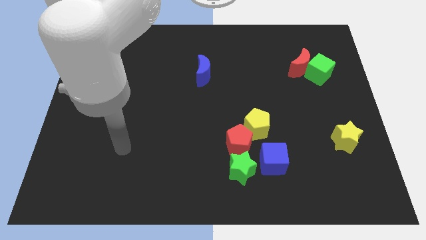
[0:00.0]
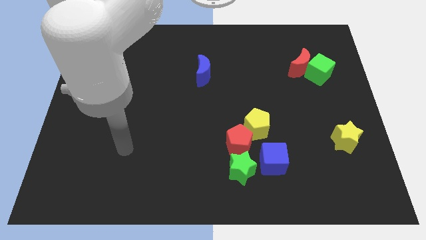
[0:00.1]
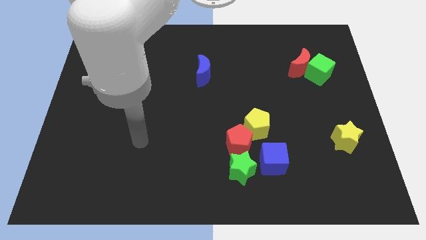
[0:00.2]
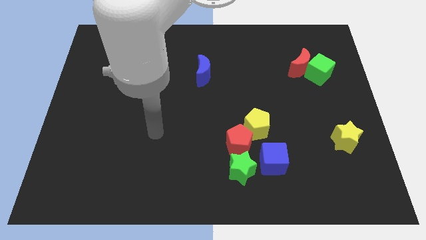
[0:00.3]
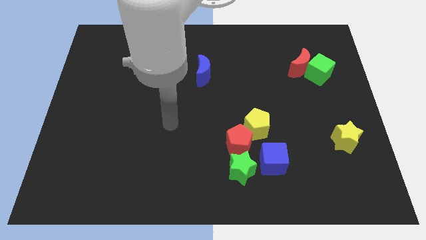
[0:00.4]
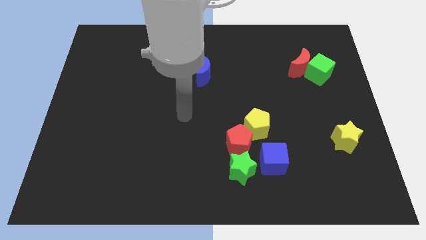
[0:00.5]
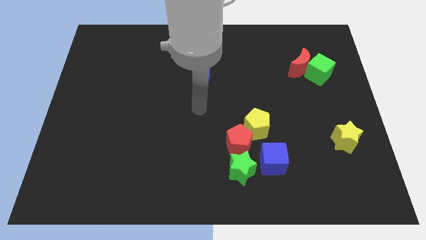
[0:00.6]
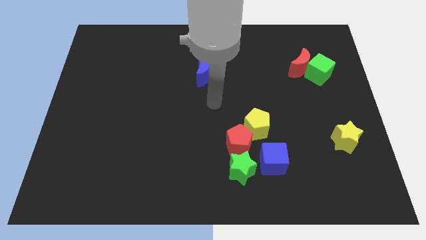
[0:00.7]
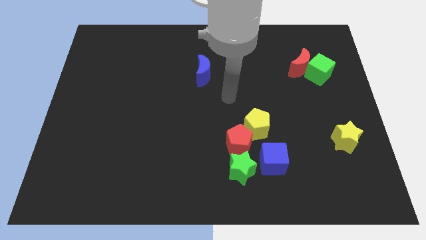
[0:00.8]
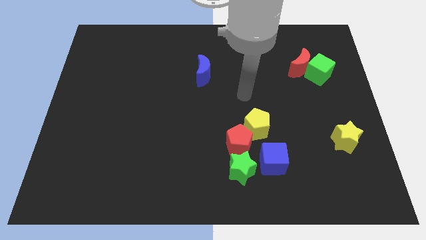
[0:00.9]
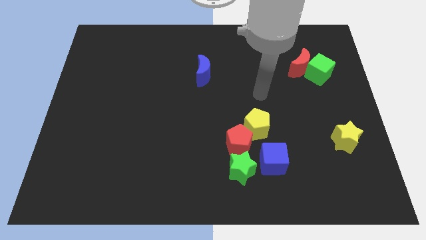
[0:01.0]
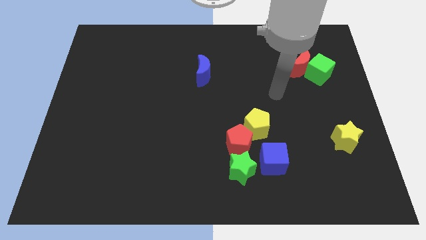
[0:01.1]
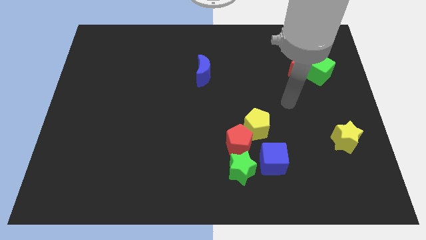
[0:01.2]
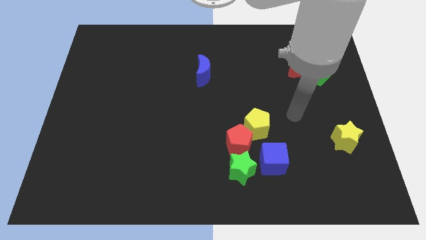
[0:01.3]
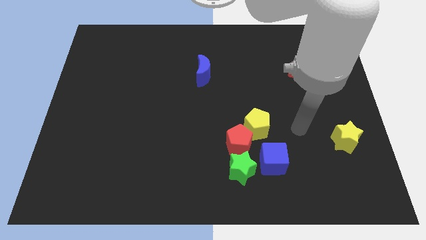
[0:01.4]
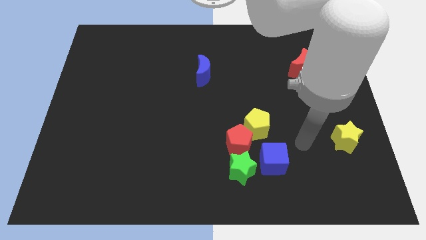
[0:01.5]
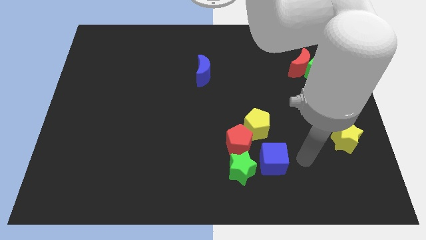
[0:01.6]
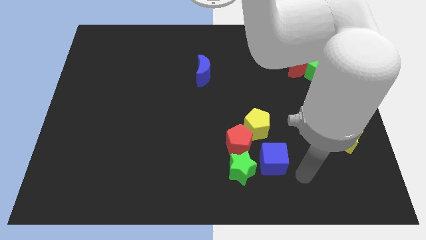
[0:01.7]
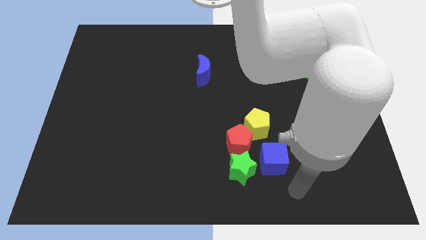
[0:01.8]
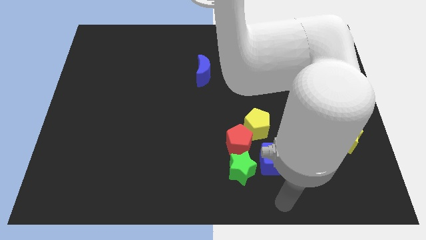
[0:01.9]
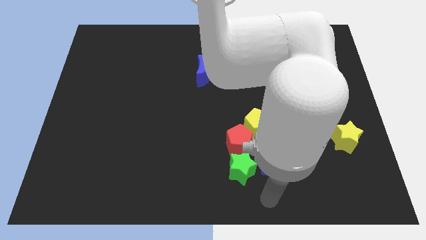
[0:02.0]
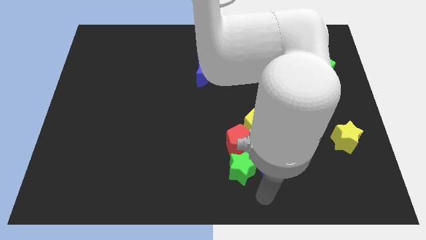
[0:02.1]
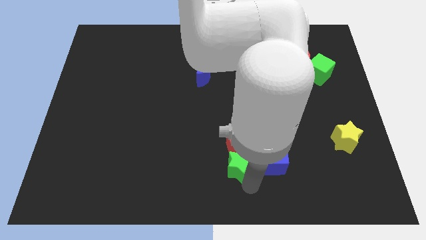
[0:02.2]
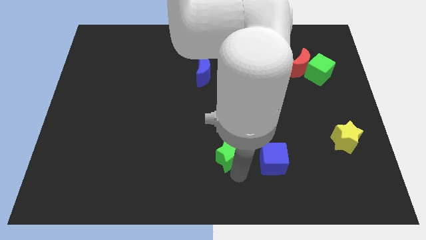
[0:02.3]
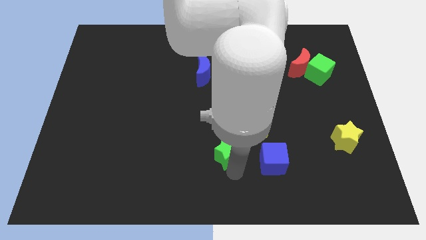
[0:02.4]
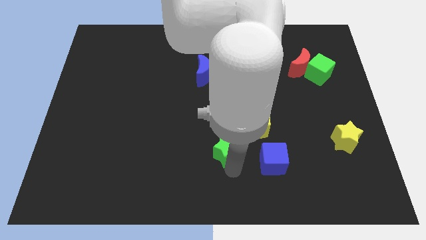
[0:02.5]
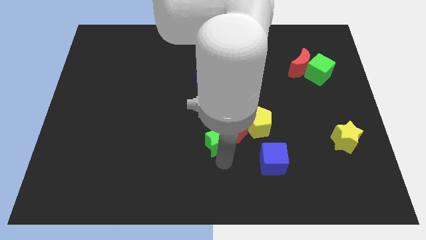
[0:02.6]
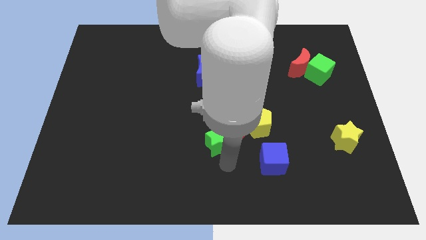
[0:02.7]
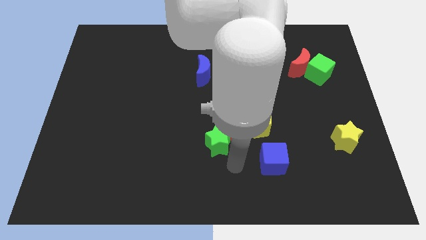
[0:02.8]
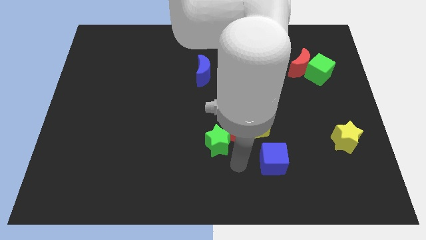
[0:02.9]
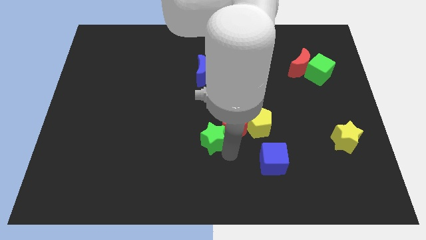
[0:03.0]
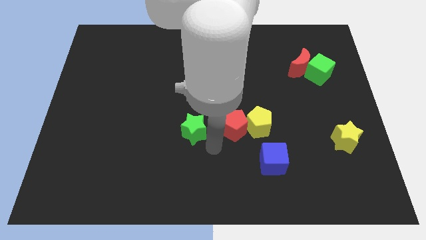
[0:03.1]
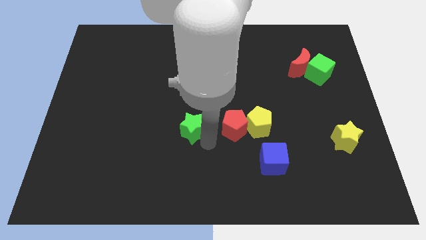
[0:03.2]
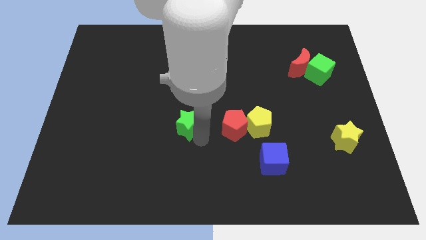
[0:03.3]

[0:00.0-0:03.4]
push the green star to the left side of the red pentagon

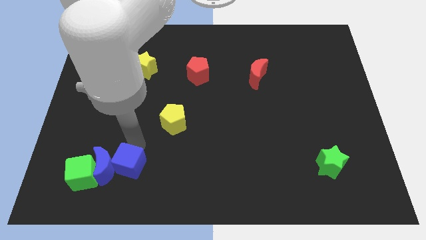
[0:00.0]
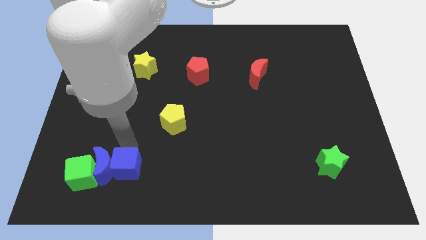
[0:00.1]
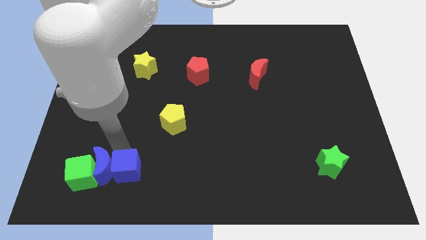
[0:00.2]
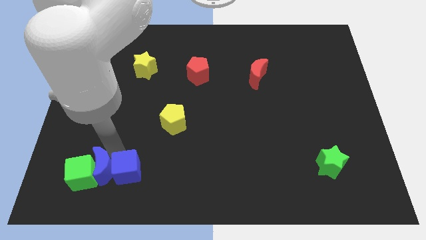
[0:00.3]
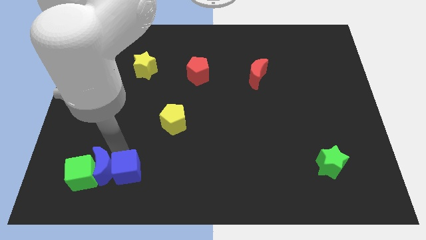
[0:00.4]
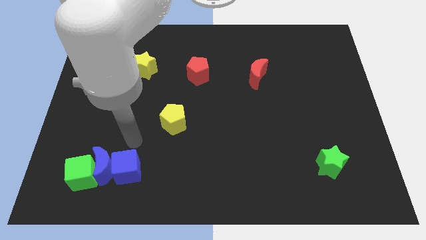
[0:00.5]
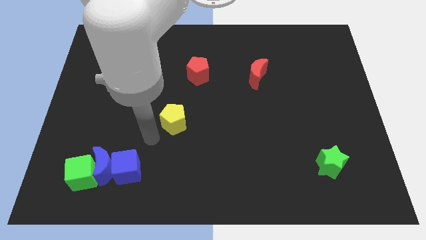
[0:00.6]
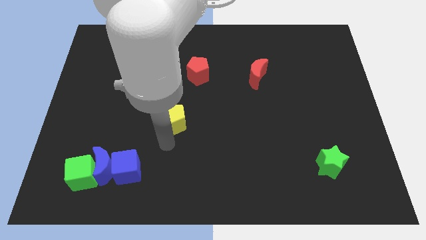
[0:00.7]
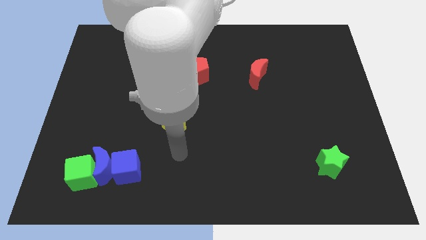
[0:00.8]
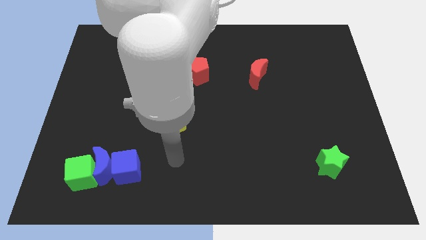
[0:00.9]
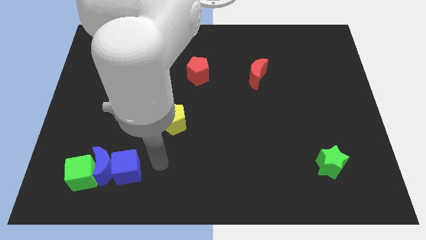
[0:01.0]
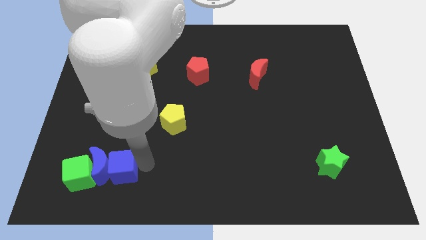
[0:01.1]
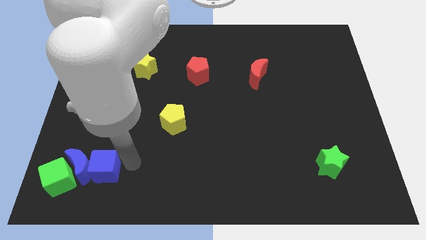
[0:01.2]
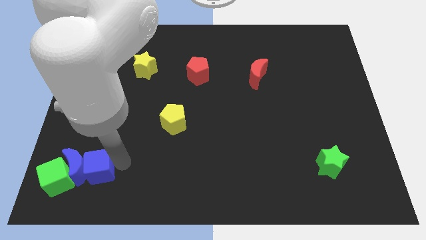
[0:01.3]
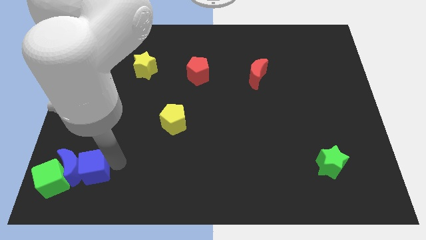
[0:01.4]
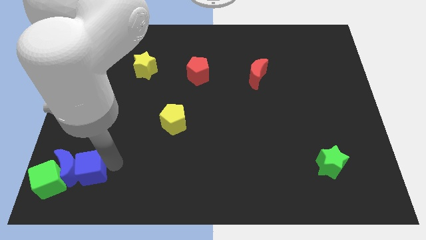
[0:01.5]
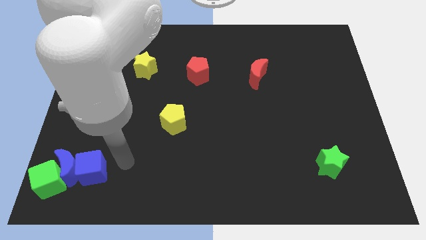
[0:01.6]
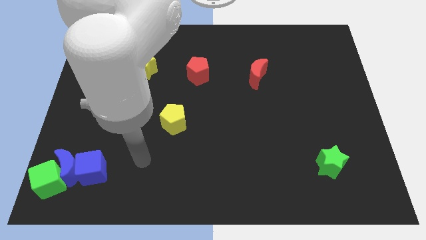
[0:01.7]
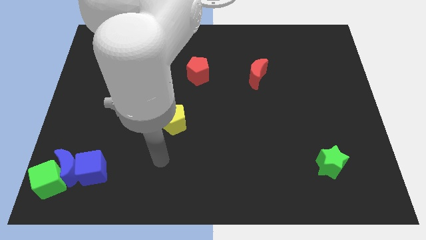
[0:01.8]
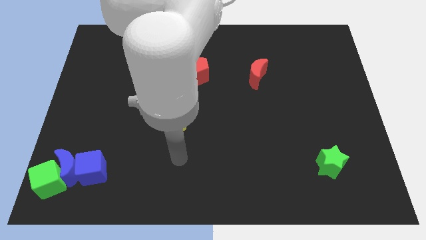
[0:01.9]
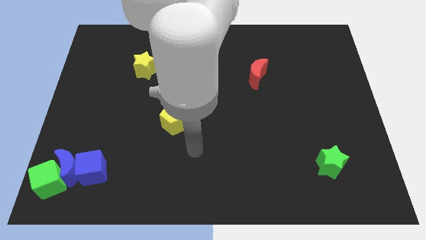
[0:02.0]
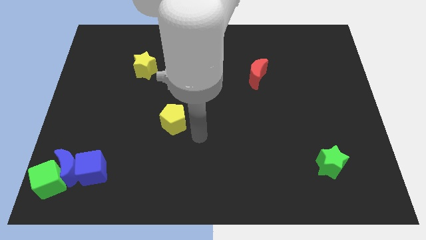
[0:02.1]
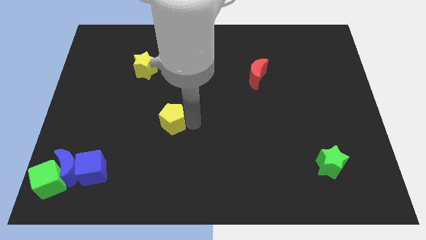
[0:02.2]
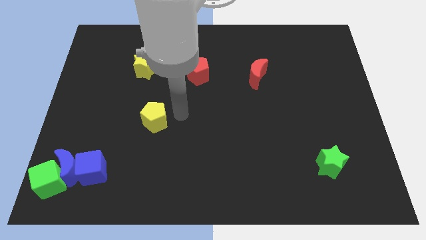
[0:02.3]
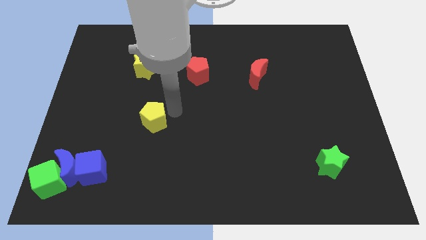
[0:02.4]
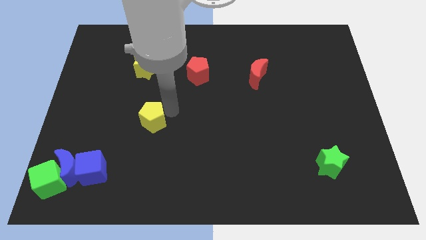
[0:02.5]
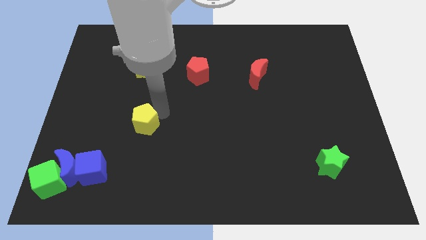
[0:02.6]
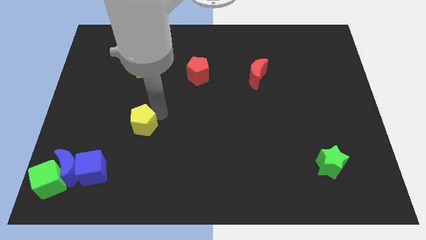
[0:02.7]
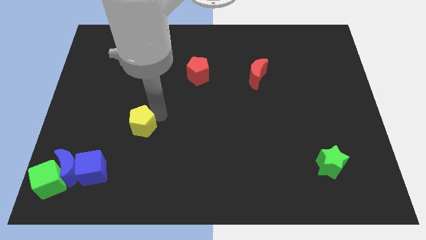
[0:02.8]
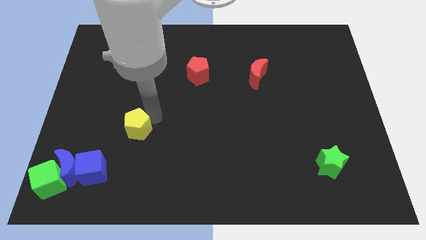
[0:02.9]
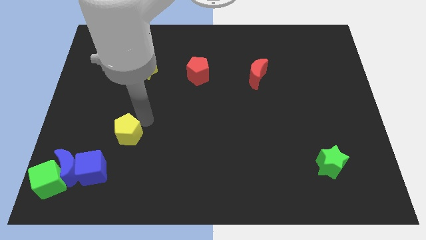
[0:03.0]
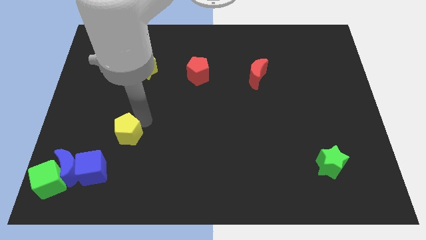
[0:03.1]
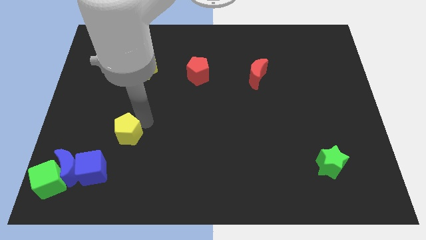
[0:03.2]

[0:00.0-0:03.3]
move the yellow pentagon below the yellow star

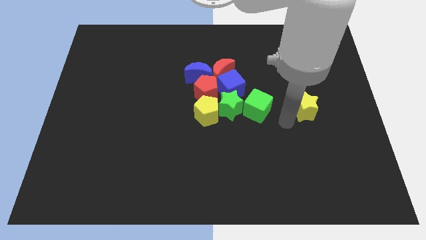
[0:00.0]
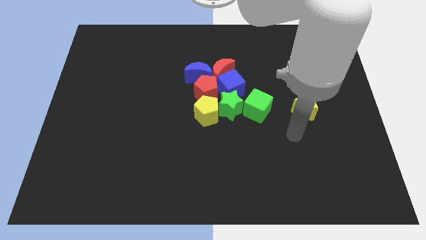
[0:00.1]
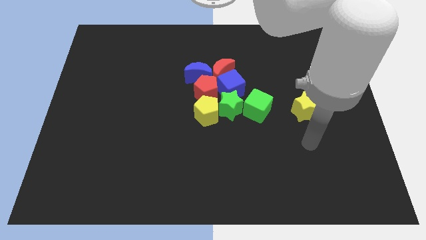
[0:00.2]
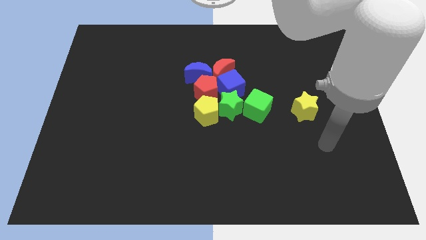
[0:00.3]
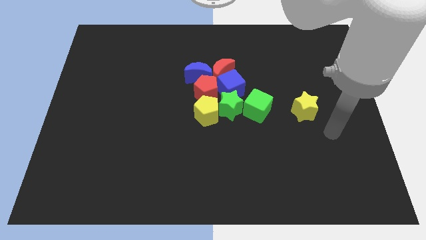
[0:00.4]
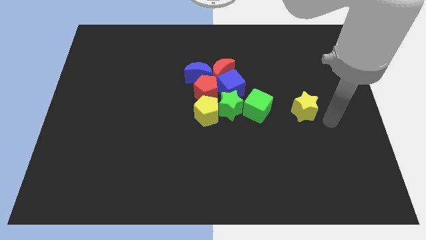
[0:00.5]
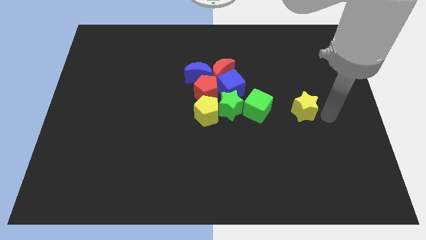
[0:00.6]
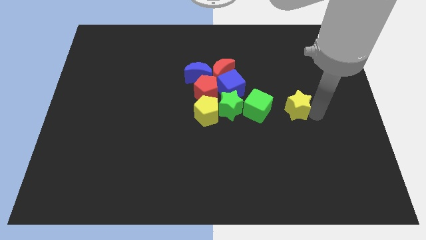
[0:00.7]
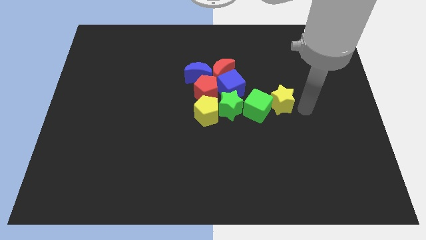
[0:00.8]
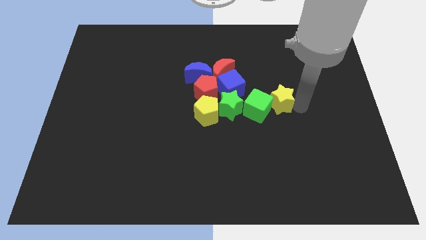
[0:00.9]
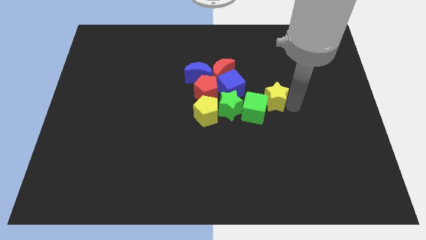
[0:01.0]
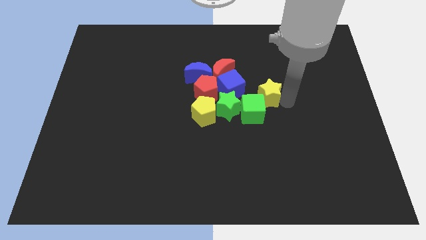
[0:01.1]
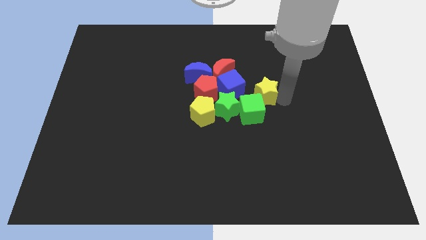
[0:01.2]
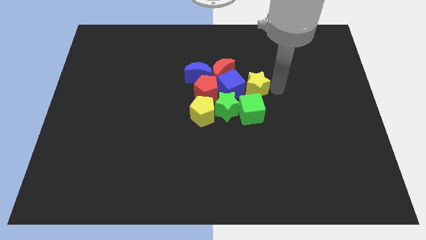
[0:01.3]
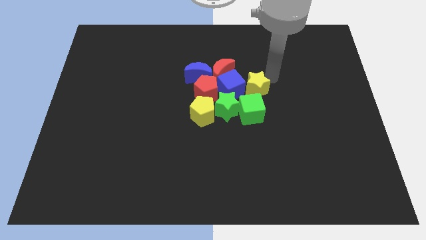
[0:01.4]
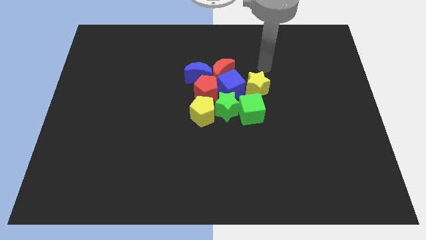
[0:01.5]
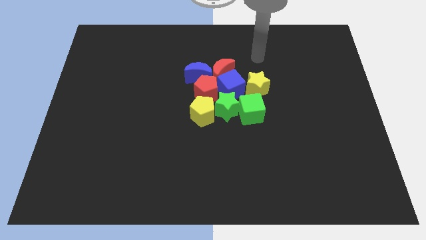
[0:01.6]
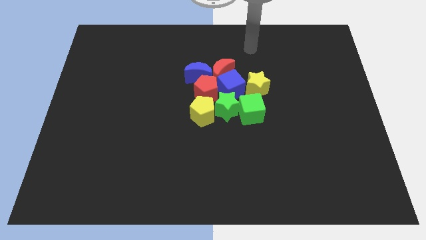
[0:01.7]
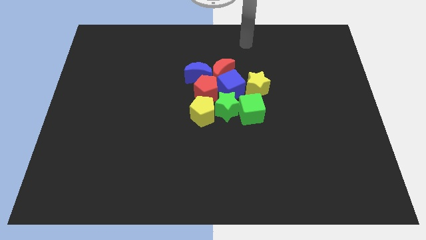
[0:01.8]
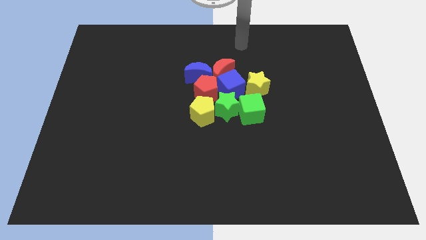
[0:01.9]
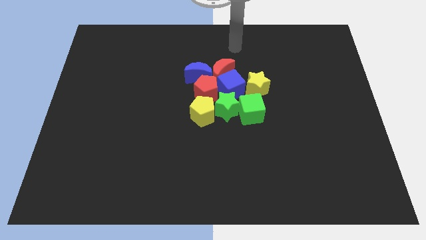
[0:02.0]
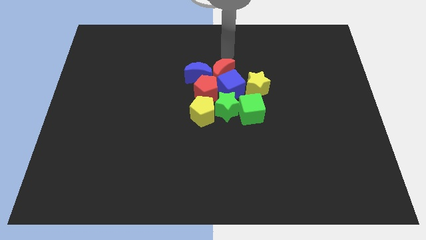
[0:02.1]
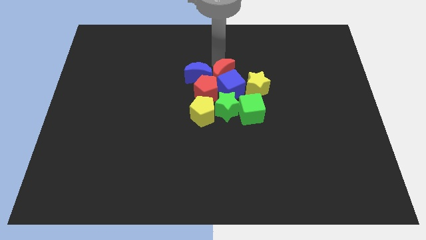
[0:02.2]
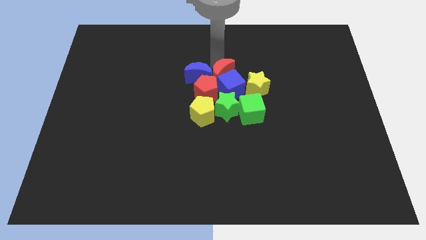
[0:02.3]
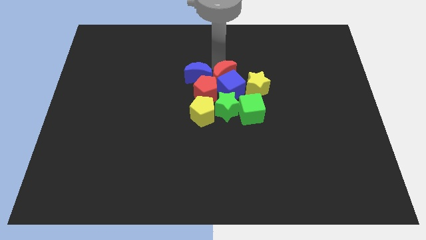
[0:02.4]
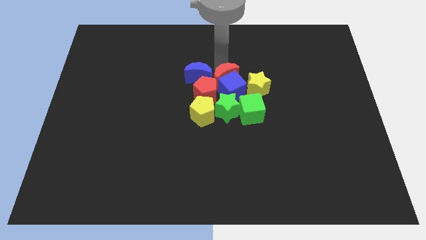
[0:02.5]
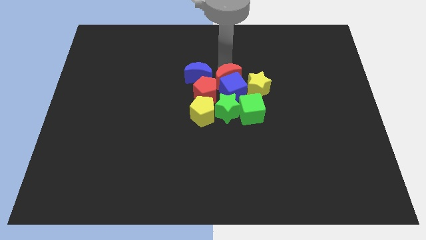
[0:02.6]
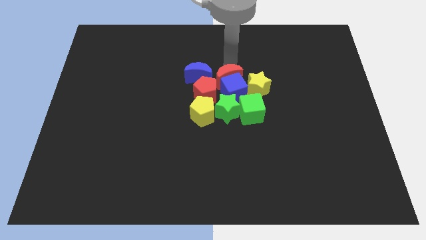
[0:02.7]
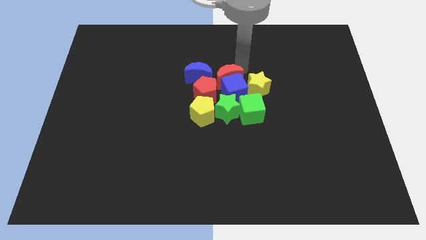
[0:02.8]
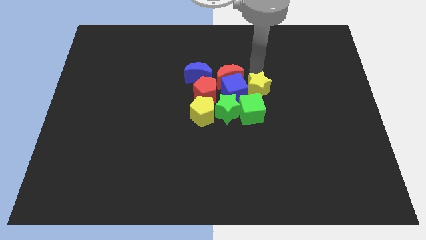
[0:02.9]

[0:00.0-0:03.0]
move the yellow star above the green cube
